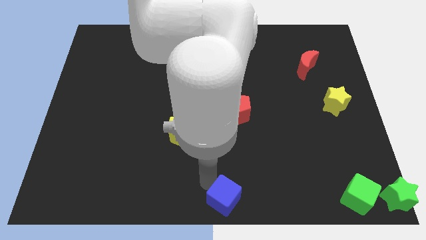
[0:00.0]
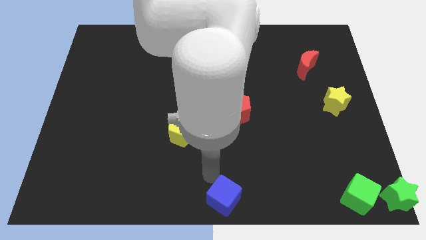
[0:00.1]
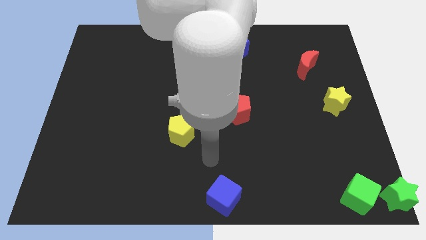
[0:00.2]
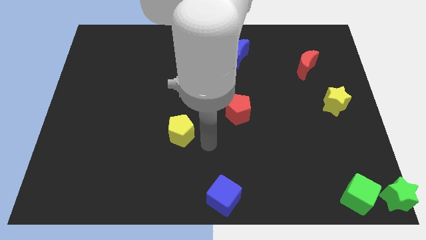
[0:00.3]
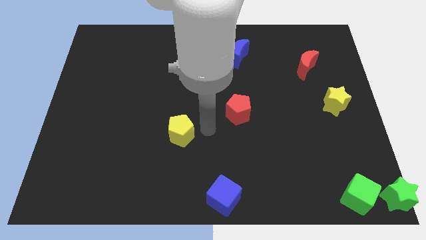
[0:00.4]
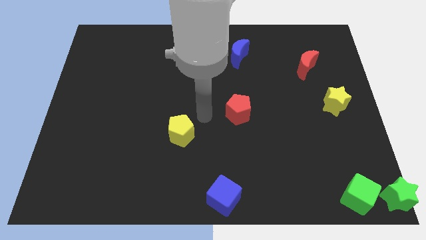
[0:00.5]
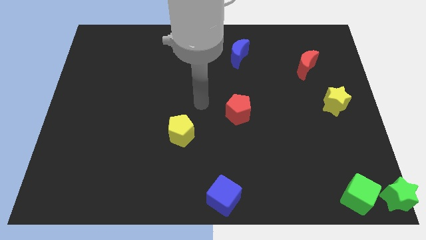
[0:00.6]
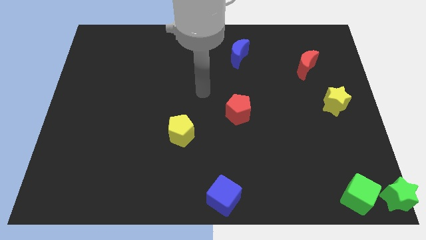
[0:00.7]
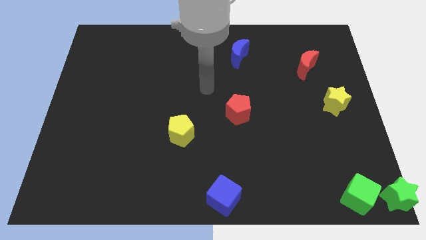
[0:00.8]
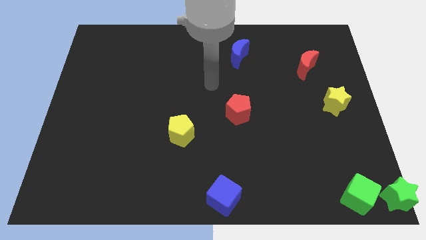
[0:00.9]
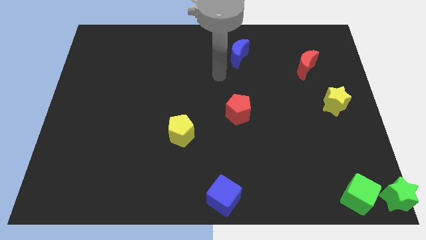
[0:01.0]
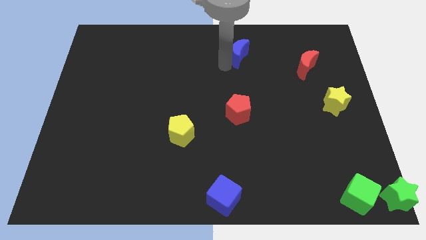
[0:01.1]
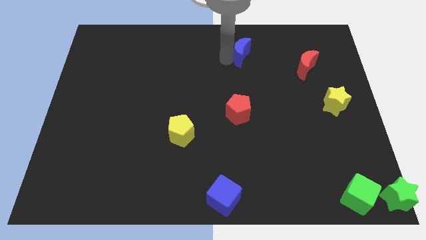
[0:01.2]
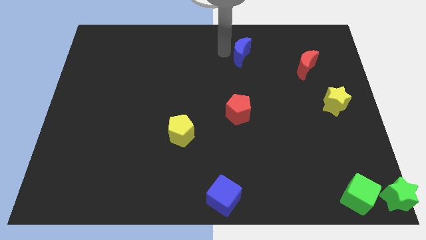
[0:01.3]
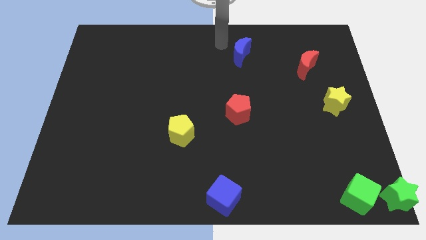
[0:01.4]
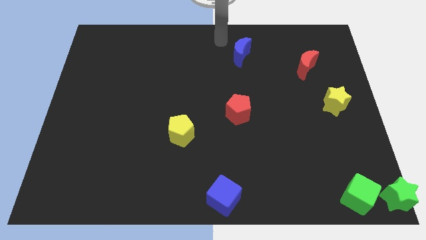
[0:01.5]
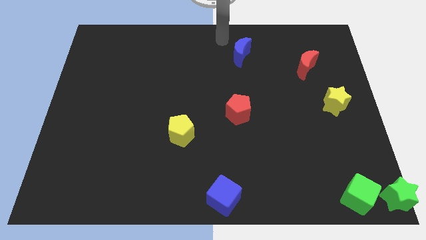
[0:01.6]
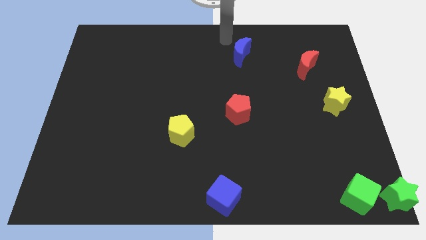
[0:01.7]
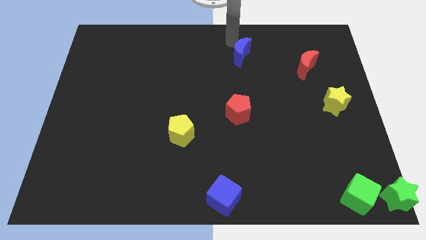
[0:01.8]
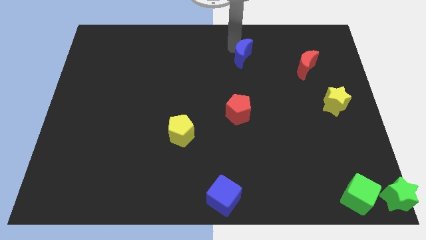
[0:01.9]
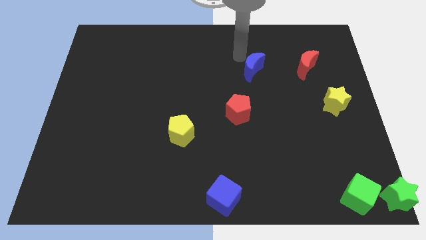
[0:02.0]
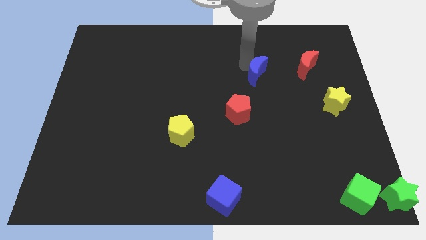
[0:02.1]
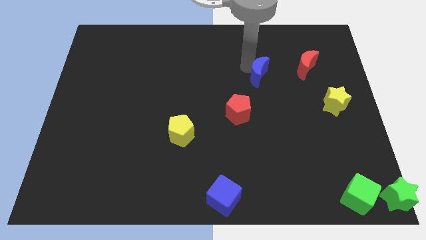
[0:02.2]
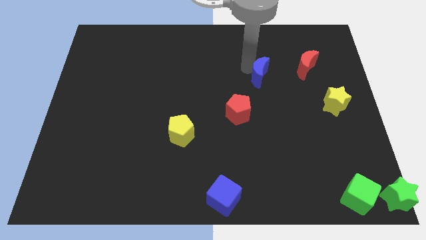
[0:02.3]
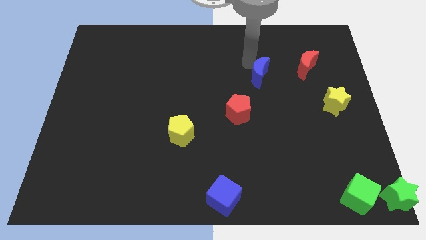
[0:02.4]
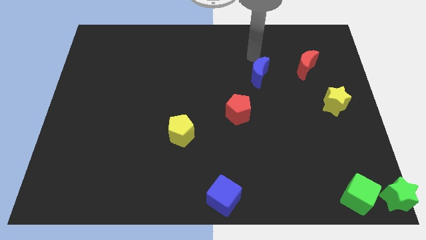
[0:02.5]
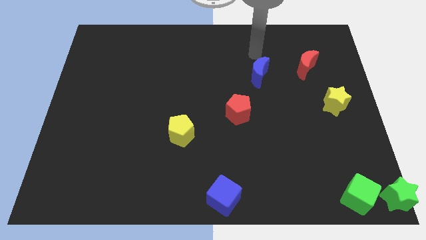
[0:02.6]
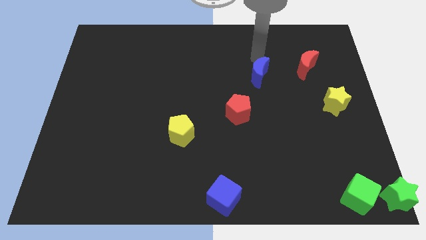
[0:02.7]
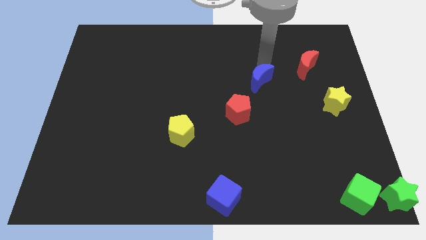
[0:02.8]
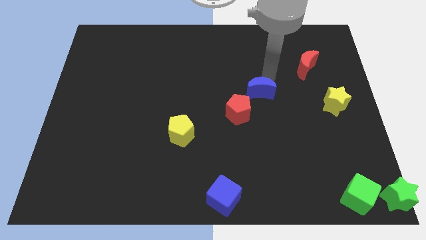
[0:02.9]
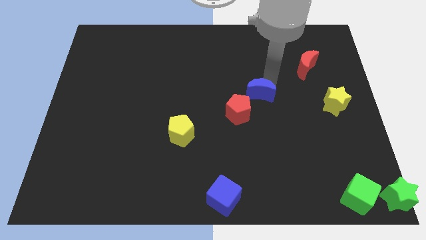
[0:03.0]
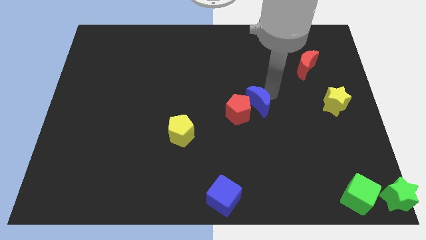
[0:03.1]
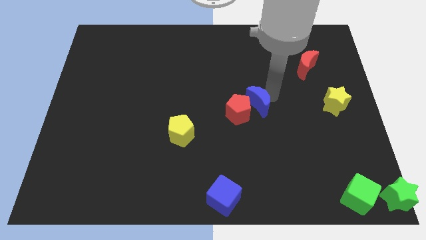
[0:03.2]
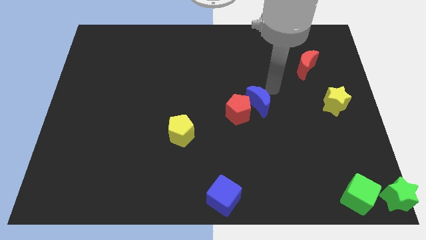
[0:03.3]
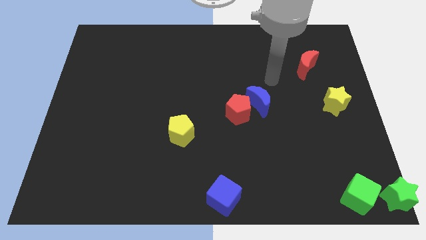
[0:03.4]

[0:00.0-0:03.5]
slide the blue moon diagonally in between red moon and the red pentagon

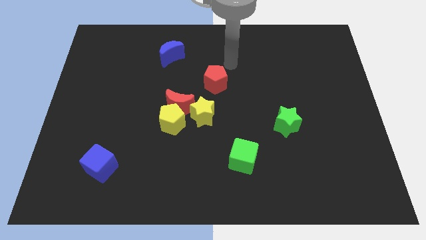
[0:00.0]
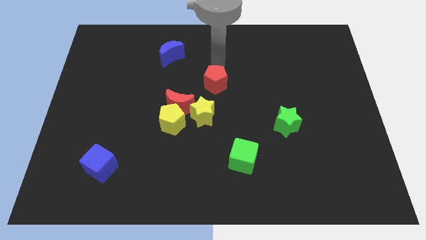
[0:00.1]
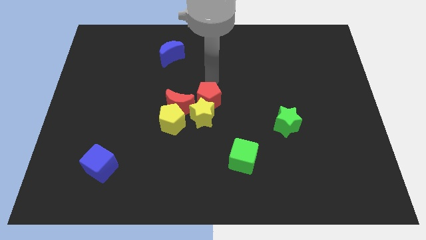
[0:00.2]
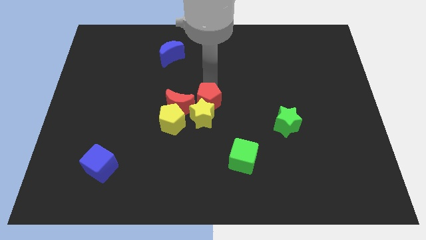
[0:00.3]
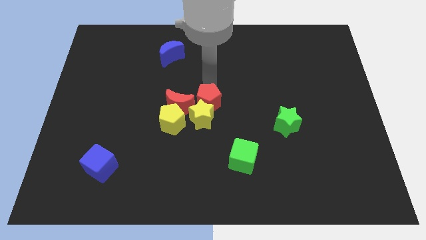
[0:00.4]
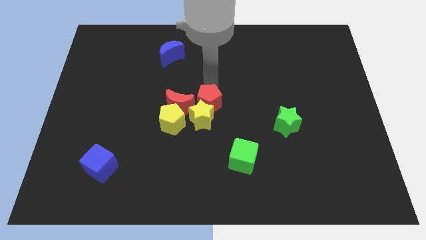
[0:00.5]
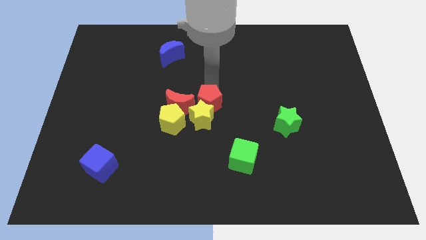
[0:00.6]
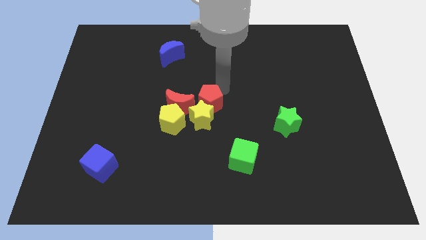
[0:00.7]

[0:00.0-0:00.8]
push the red pentagon into yellow star

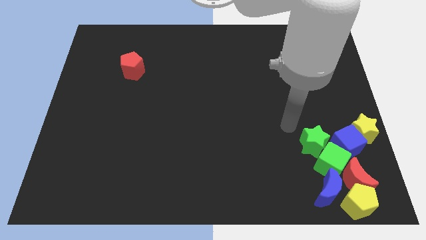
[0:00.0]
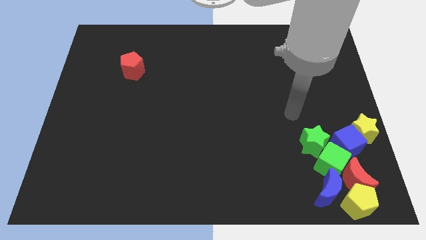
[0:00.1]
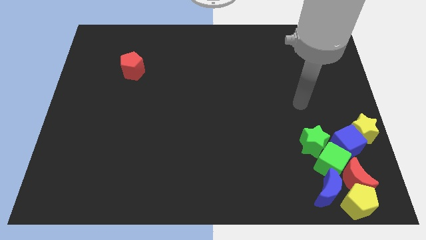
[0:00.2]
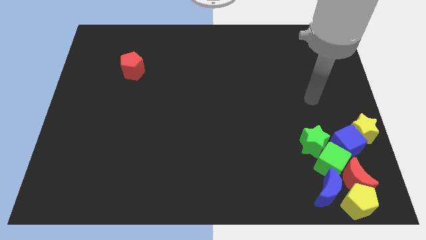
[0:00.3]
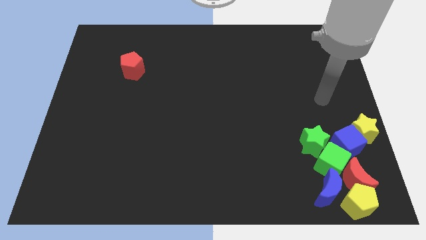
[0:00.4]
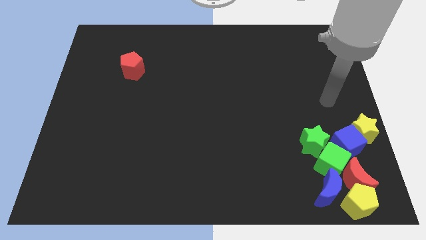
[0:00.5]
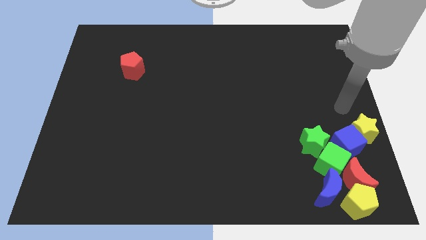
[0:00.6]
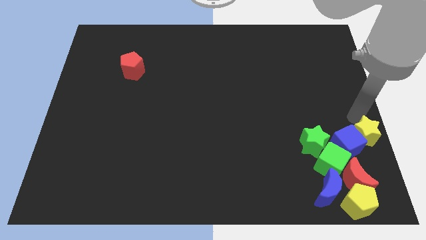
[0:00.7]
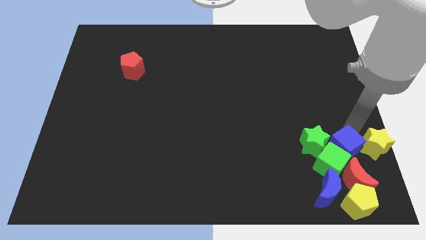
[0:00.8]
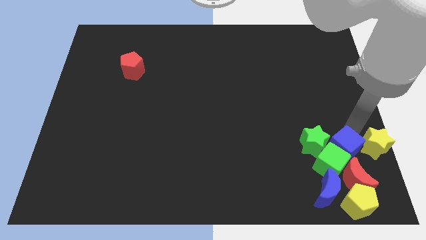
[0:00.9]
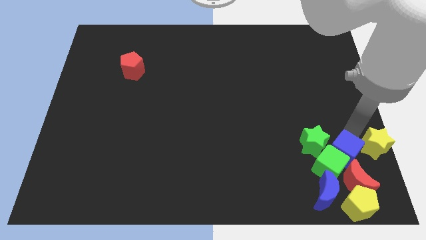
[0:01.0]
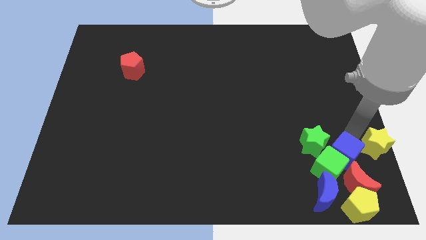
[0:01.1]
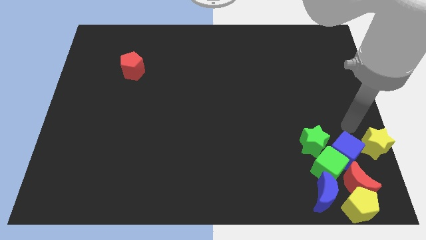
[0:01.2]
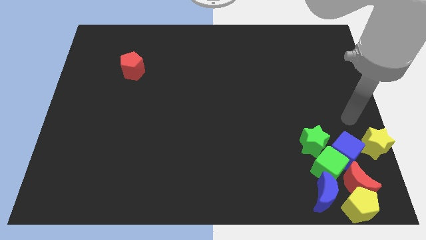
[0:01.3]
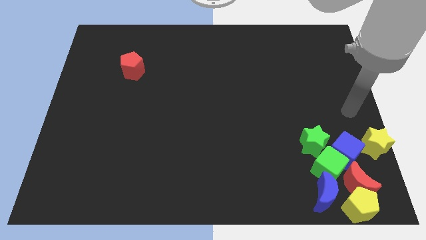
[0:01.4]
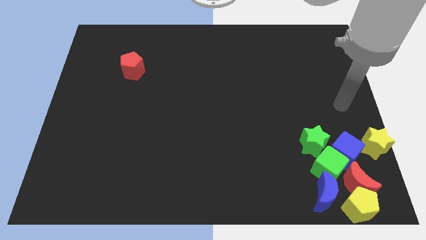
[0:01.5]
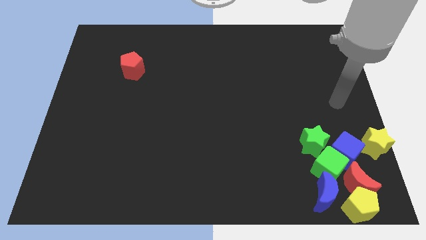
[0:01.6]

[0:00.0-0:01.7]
push the yellow star slightly downwards

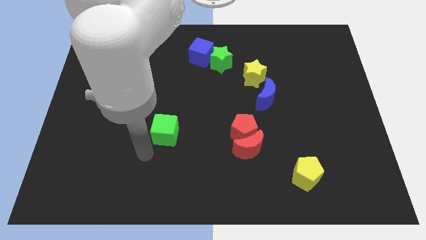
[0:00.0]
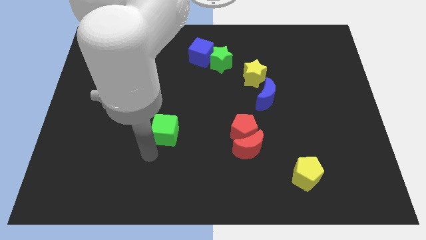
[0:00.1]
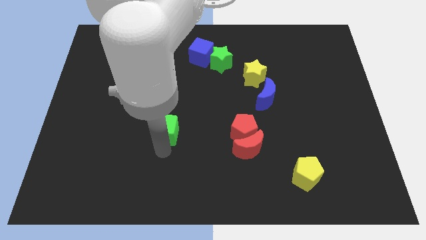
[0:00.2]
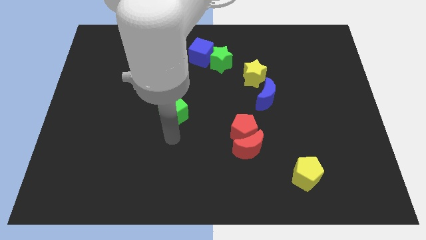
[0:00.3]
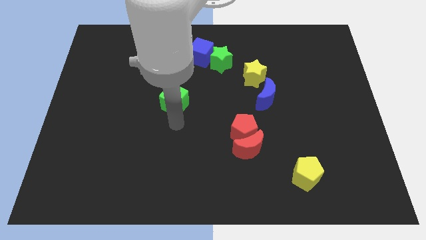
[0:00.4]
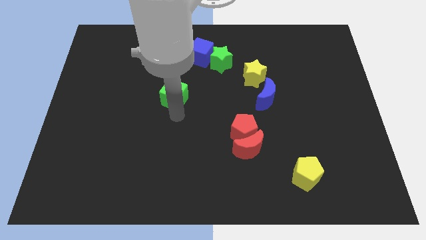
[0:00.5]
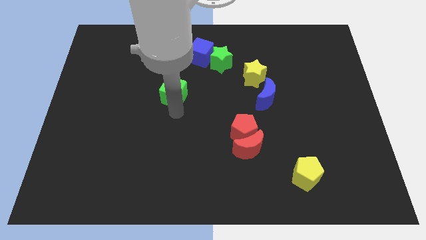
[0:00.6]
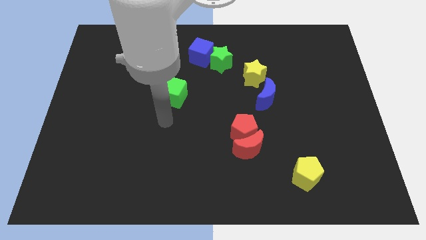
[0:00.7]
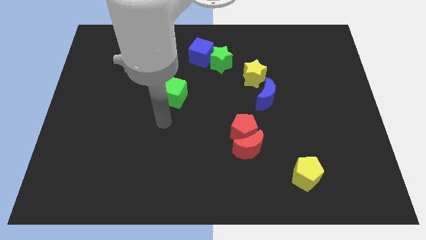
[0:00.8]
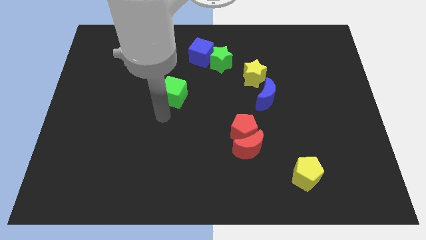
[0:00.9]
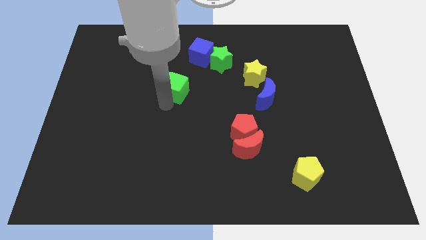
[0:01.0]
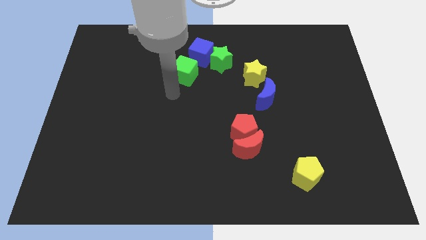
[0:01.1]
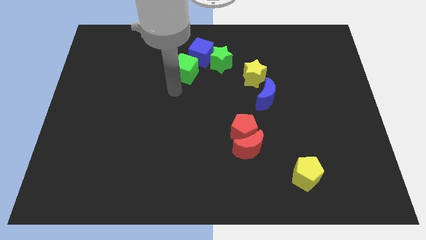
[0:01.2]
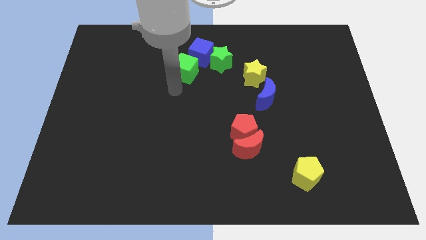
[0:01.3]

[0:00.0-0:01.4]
push the green cube close to the blue cube

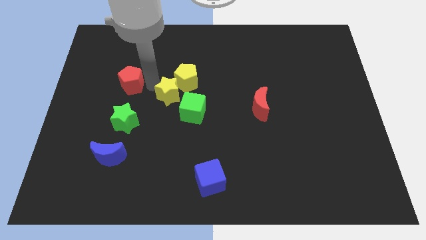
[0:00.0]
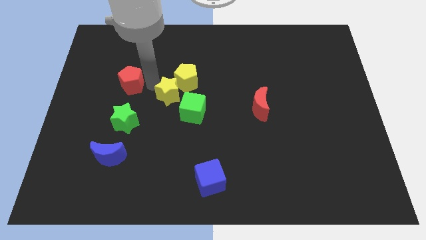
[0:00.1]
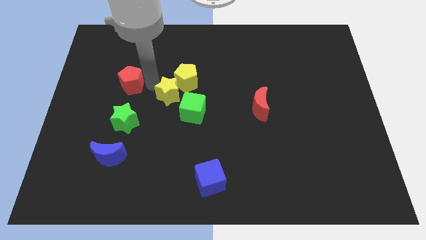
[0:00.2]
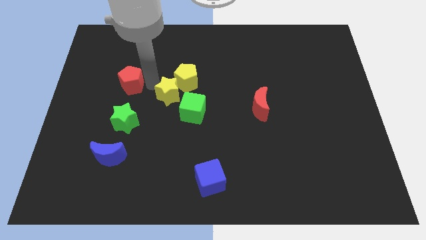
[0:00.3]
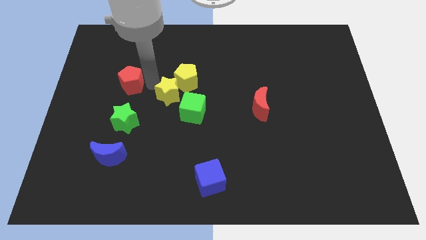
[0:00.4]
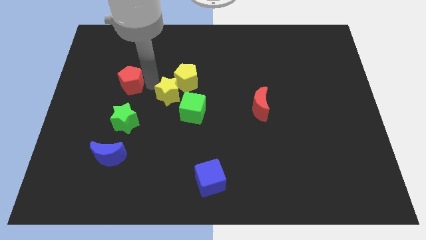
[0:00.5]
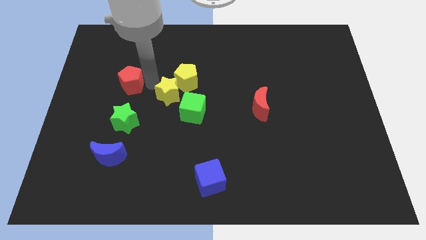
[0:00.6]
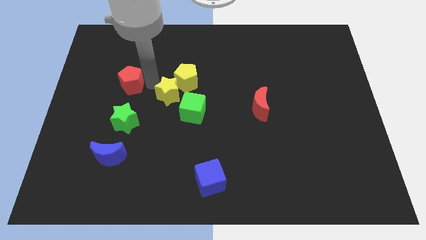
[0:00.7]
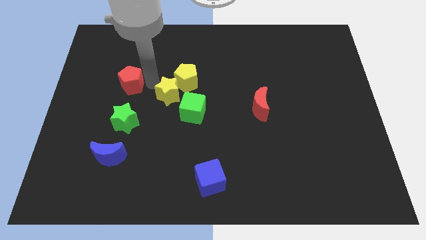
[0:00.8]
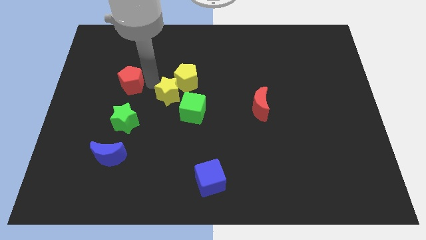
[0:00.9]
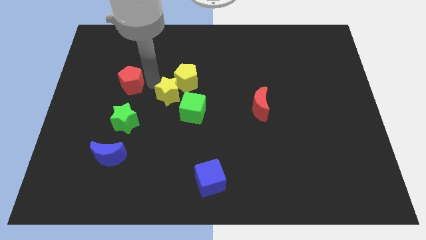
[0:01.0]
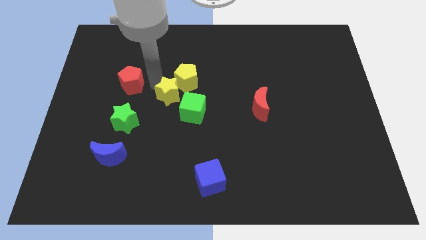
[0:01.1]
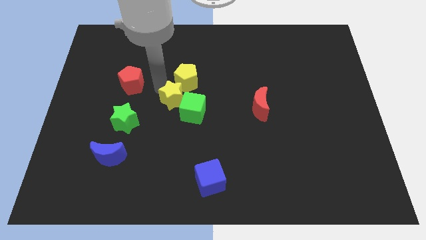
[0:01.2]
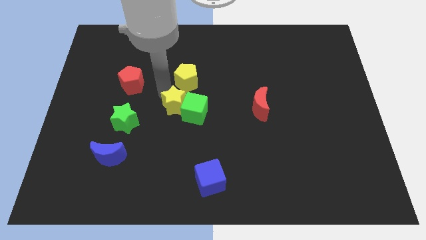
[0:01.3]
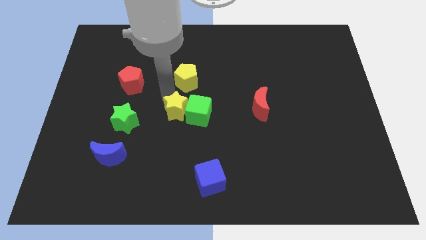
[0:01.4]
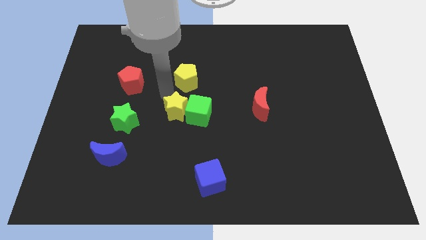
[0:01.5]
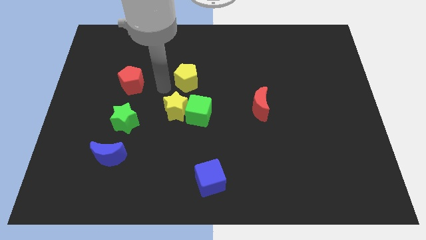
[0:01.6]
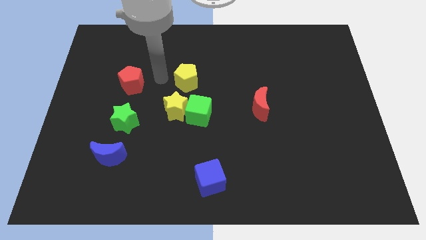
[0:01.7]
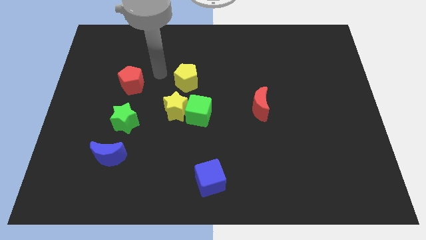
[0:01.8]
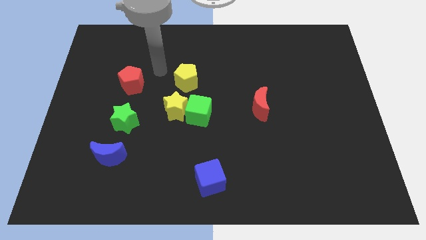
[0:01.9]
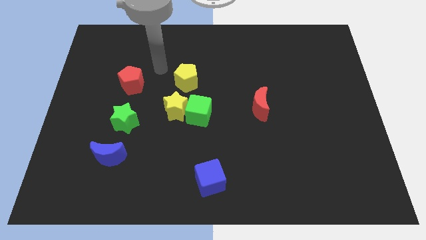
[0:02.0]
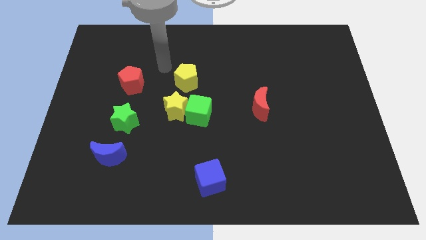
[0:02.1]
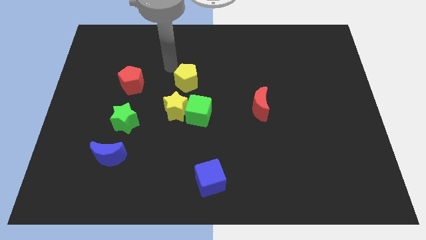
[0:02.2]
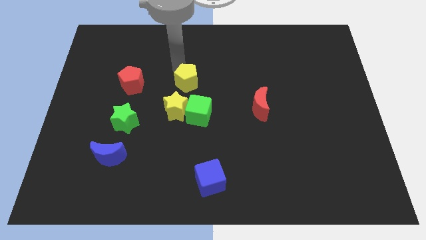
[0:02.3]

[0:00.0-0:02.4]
push the yellow star into green cube
